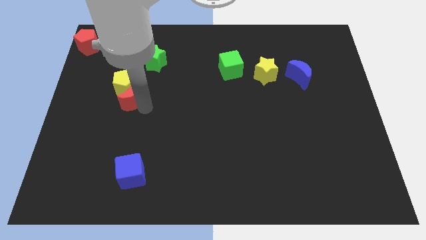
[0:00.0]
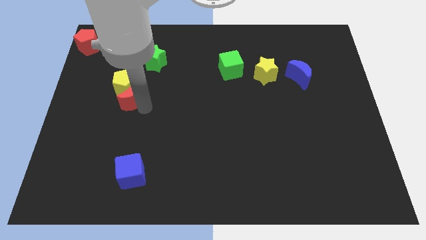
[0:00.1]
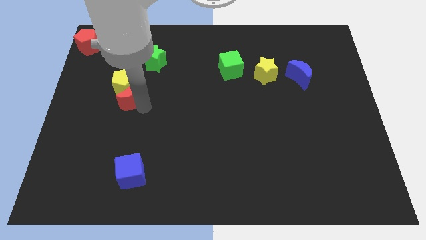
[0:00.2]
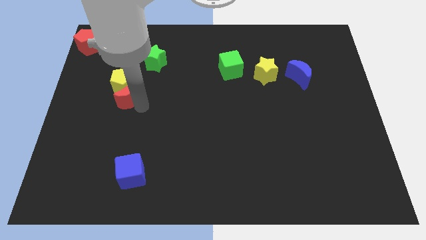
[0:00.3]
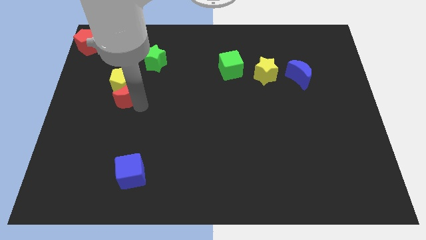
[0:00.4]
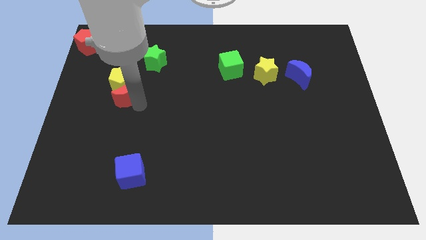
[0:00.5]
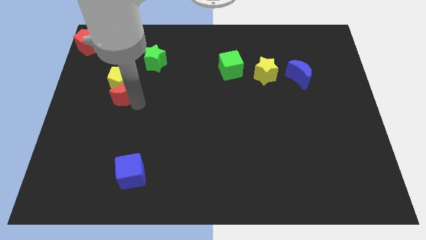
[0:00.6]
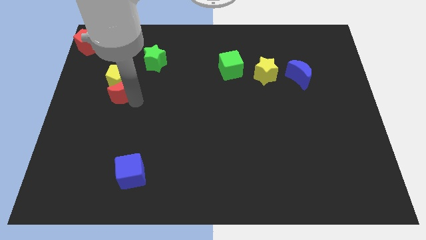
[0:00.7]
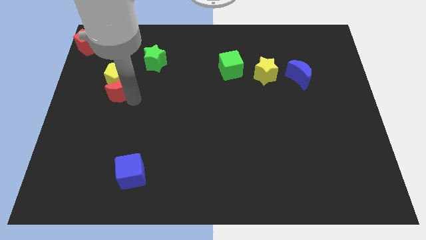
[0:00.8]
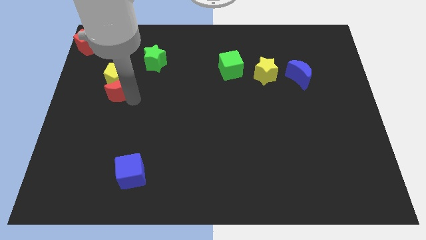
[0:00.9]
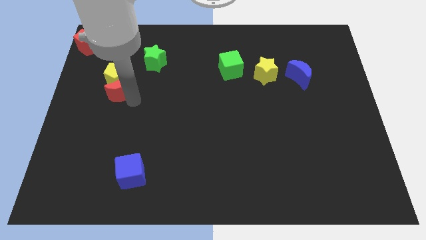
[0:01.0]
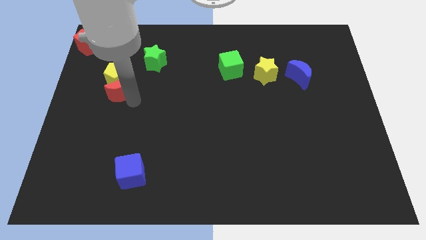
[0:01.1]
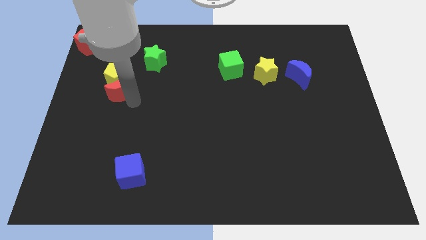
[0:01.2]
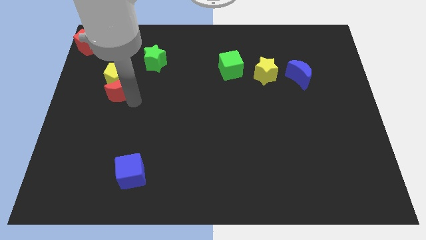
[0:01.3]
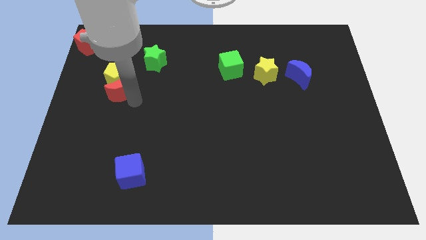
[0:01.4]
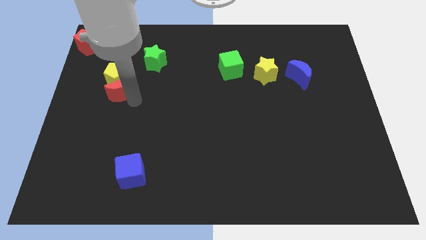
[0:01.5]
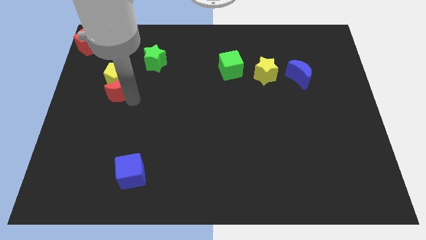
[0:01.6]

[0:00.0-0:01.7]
push the yellow pentagon and the red crescent towards top left

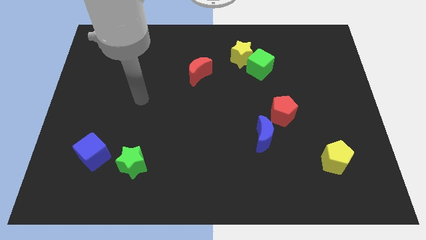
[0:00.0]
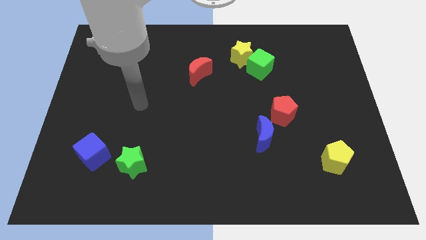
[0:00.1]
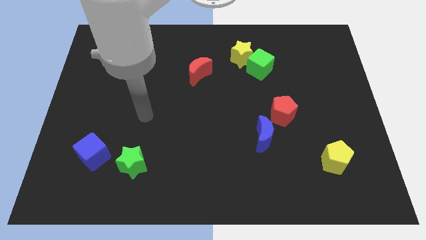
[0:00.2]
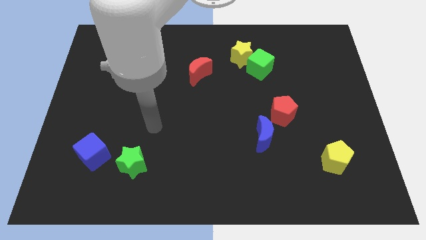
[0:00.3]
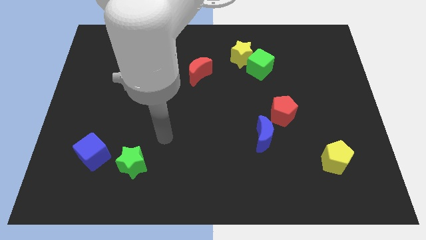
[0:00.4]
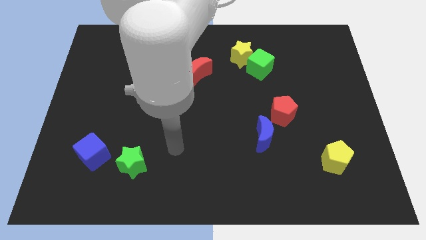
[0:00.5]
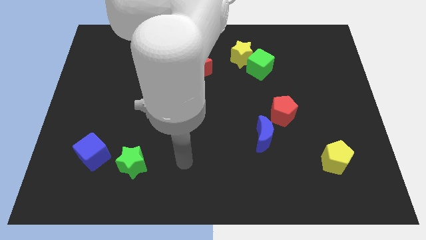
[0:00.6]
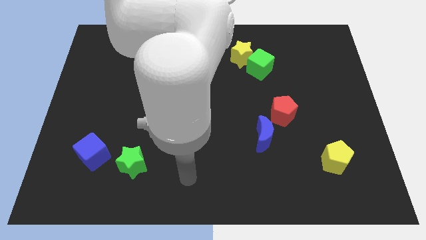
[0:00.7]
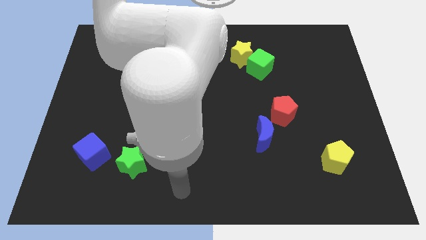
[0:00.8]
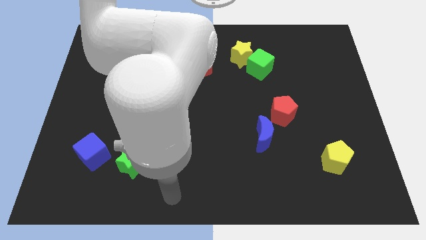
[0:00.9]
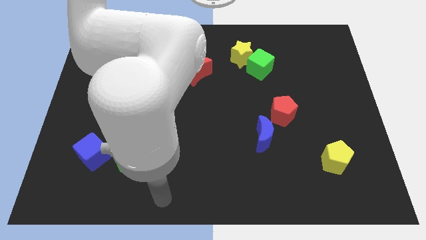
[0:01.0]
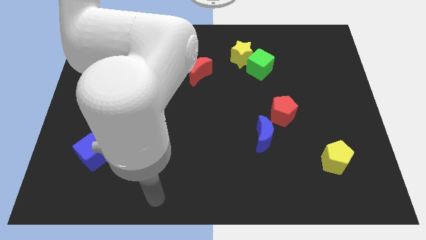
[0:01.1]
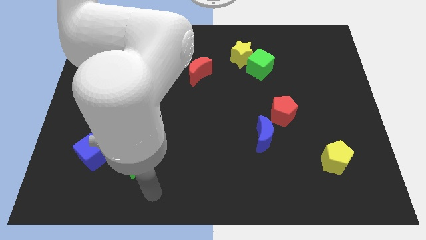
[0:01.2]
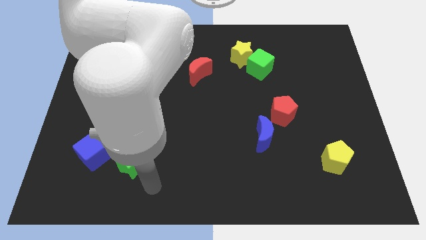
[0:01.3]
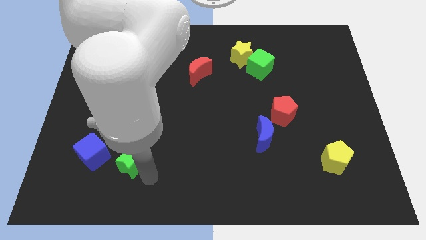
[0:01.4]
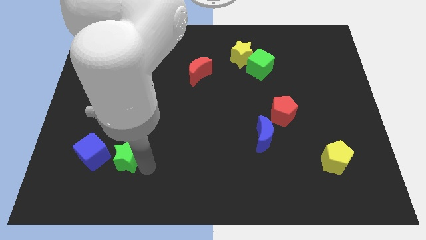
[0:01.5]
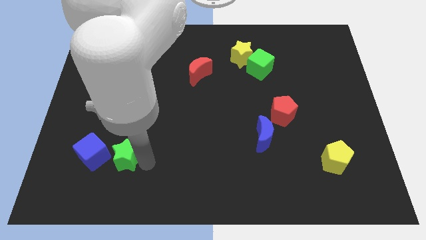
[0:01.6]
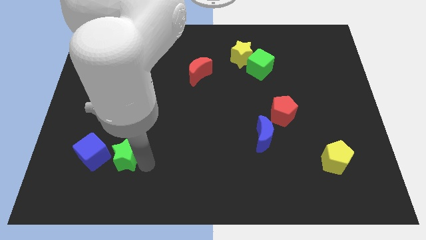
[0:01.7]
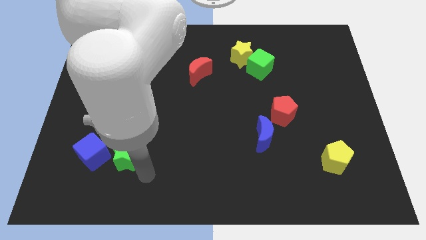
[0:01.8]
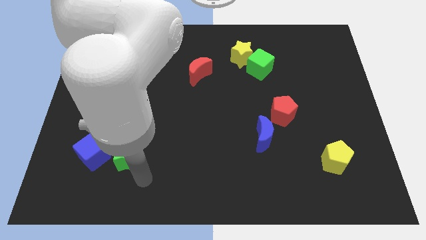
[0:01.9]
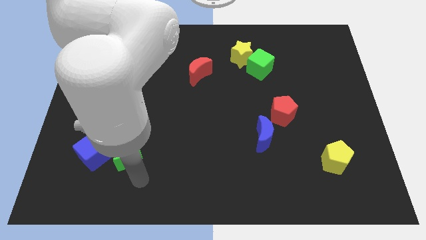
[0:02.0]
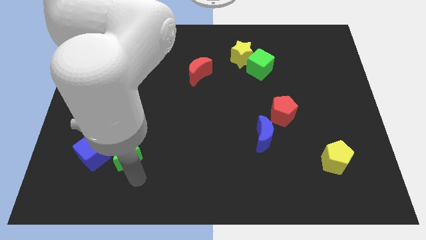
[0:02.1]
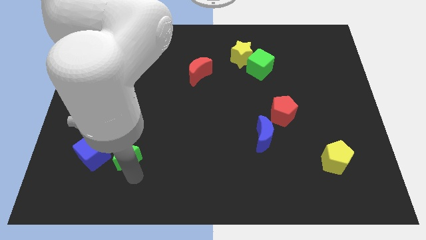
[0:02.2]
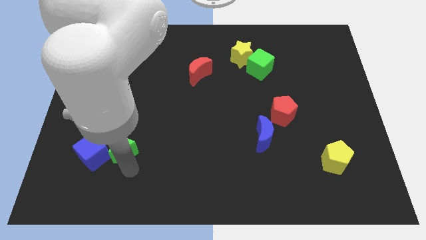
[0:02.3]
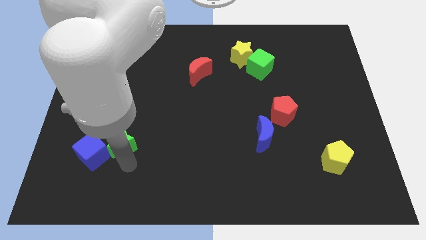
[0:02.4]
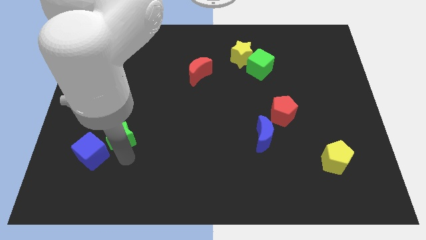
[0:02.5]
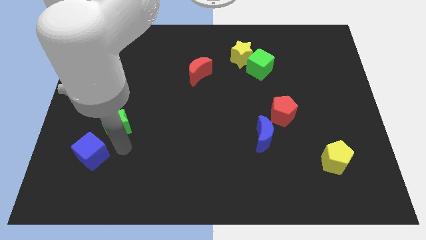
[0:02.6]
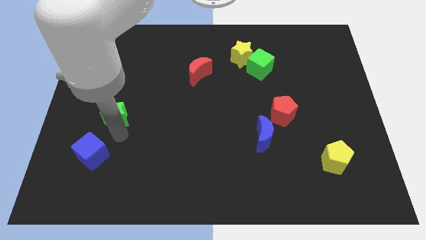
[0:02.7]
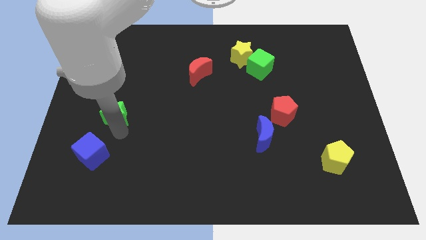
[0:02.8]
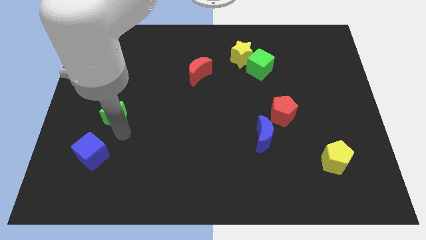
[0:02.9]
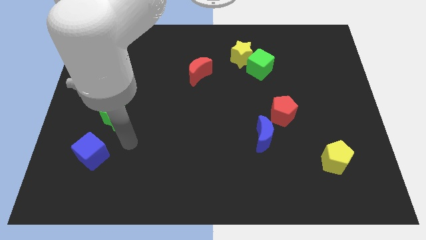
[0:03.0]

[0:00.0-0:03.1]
move the green star to the top of the blue cube

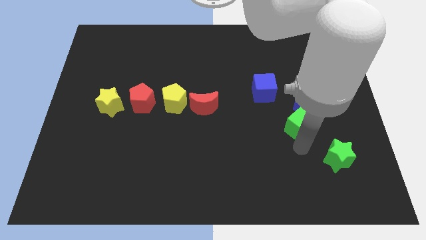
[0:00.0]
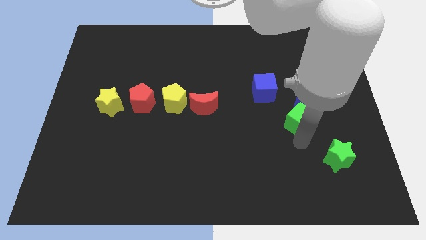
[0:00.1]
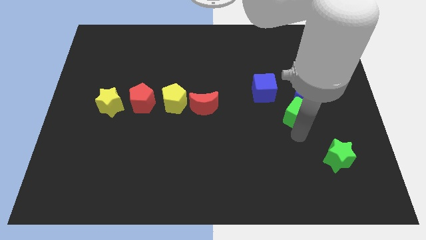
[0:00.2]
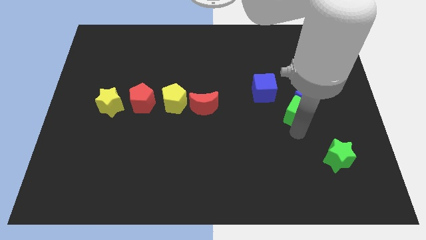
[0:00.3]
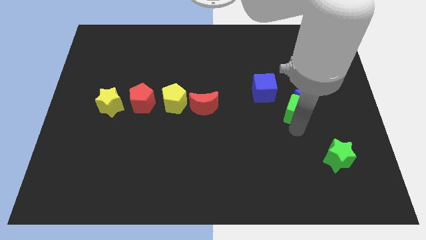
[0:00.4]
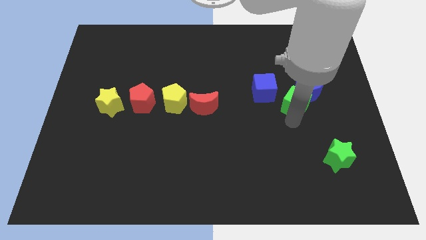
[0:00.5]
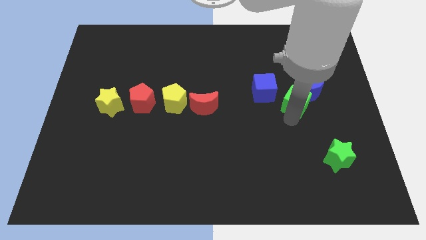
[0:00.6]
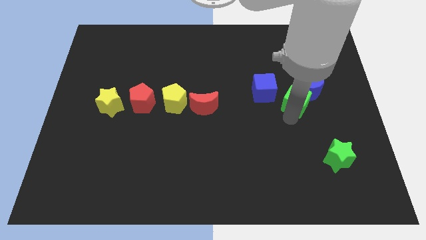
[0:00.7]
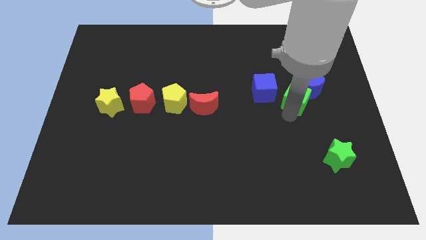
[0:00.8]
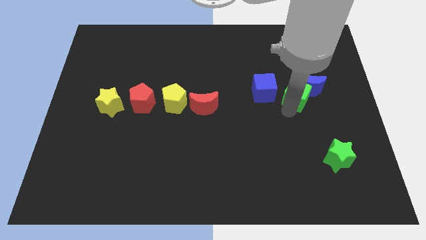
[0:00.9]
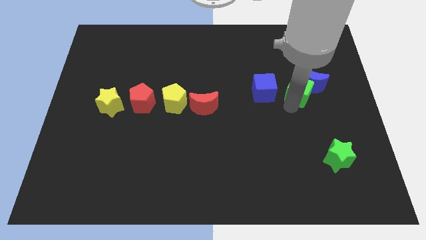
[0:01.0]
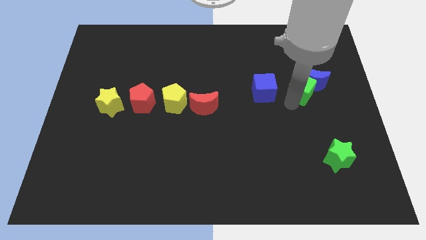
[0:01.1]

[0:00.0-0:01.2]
push green cube into blue moon

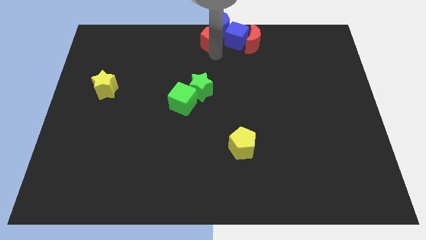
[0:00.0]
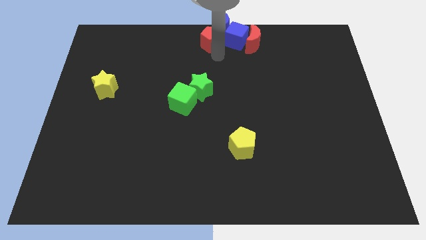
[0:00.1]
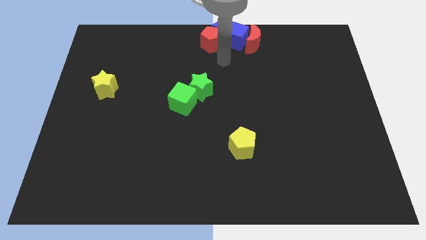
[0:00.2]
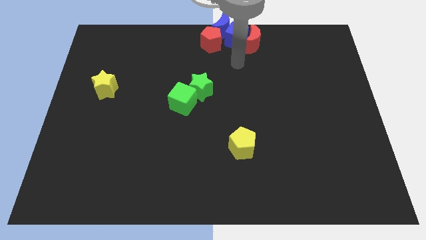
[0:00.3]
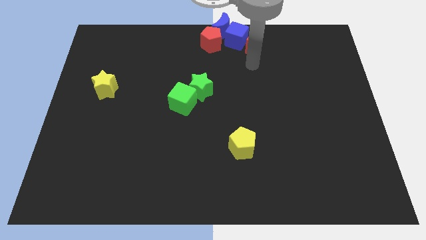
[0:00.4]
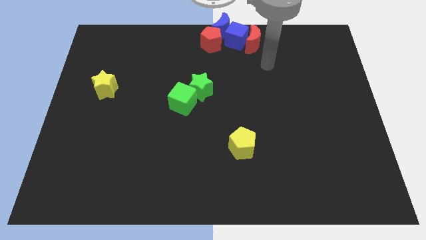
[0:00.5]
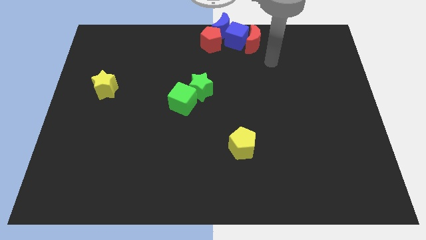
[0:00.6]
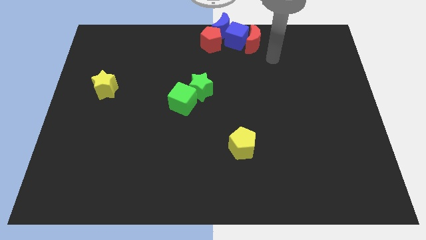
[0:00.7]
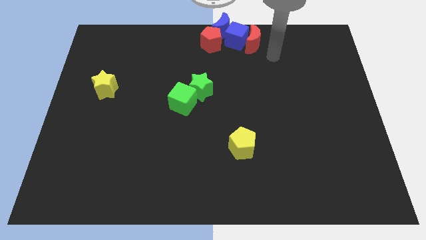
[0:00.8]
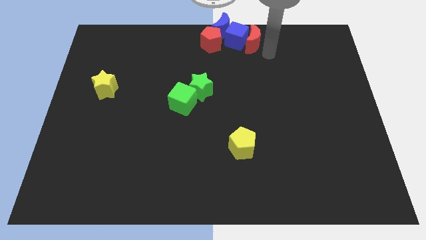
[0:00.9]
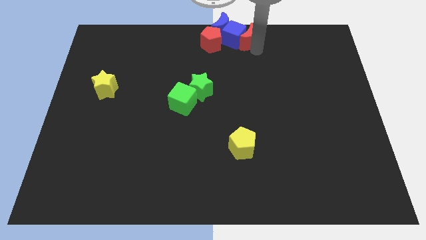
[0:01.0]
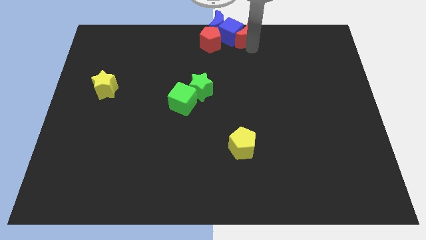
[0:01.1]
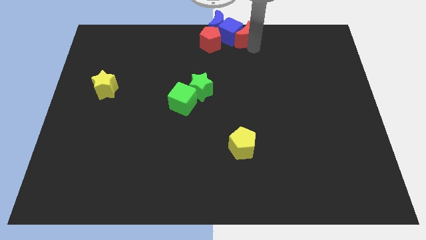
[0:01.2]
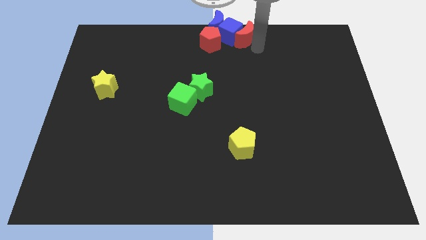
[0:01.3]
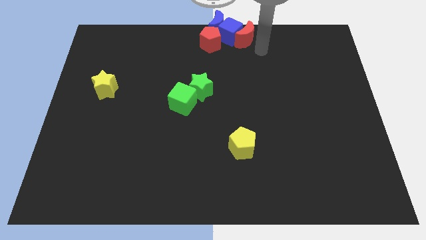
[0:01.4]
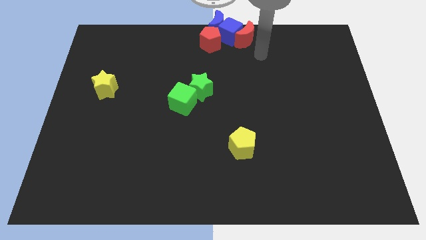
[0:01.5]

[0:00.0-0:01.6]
move the red blocks into the blue blocks

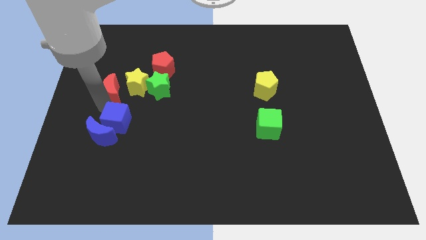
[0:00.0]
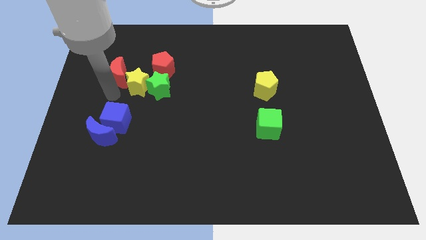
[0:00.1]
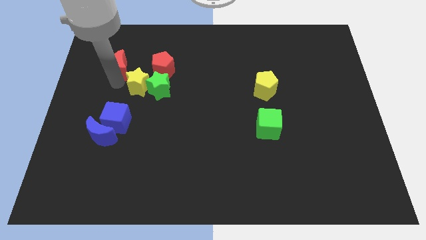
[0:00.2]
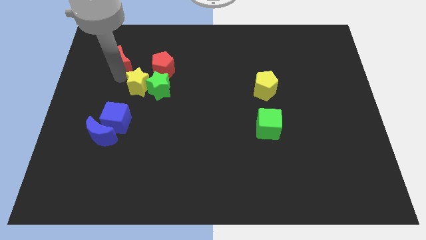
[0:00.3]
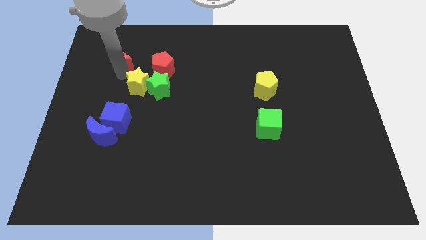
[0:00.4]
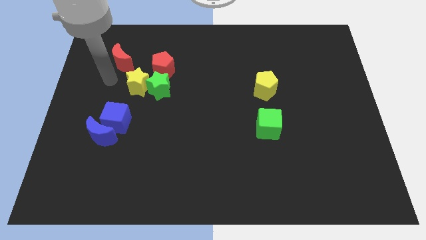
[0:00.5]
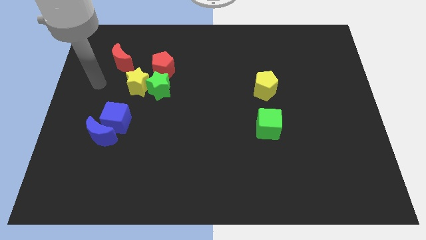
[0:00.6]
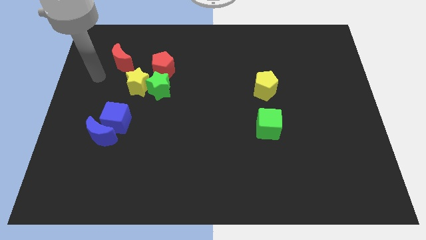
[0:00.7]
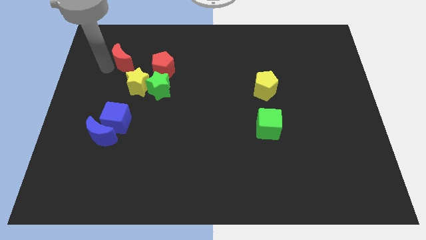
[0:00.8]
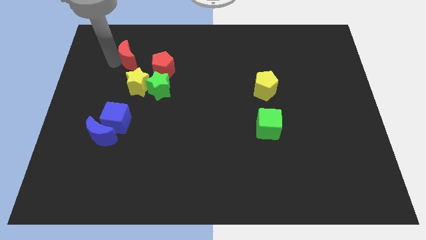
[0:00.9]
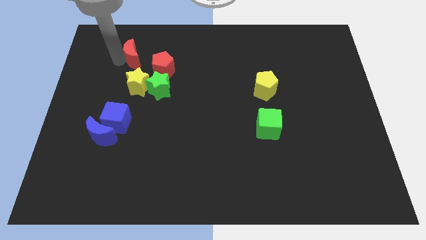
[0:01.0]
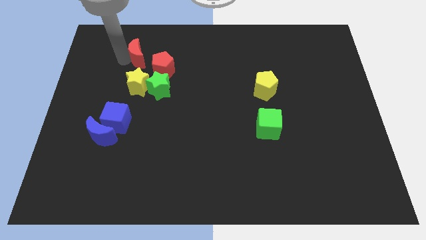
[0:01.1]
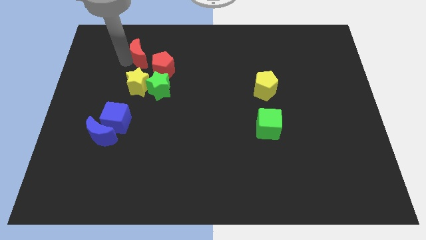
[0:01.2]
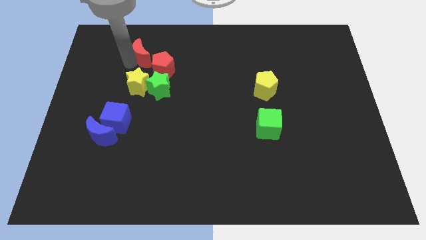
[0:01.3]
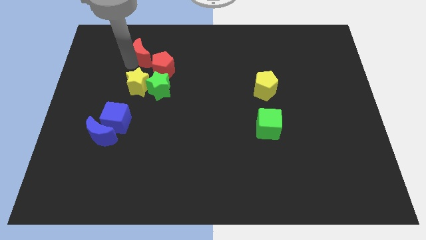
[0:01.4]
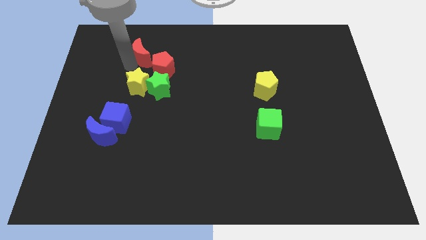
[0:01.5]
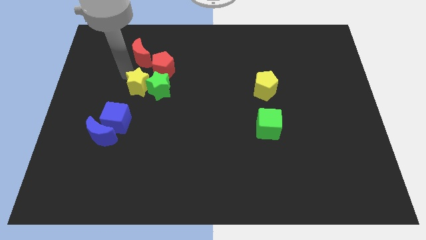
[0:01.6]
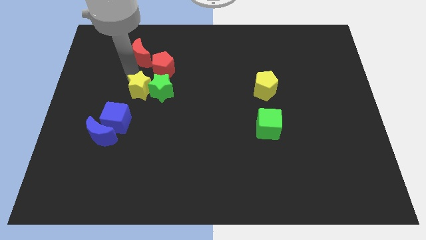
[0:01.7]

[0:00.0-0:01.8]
move the red moon into red pentagon to the left
